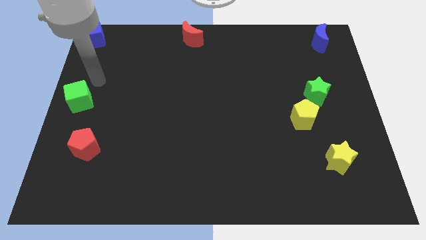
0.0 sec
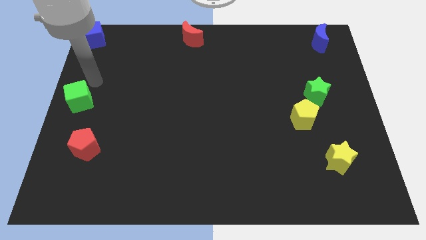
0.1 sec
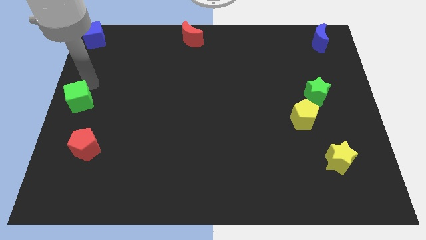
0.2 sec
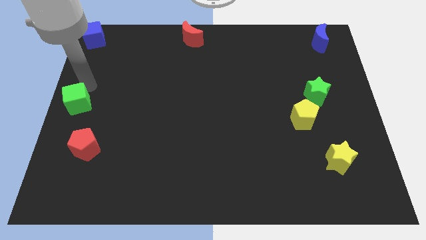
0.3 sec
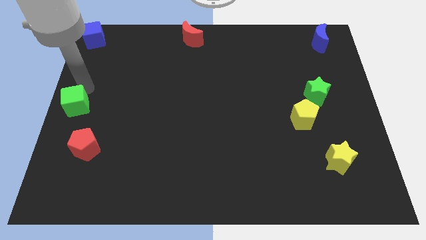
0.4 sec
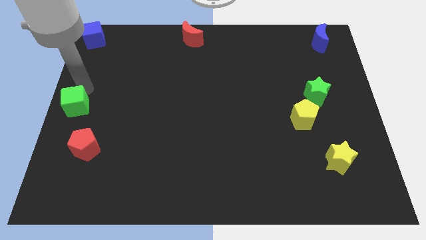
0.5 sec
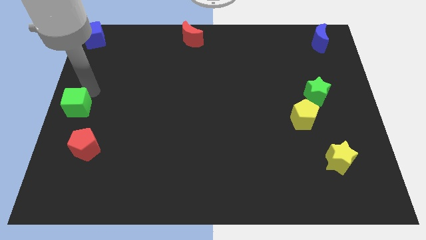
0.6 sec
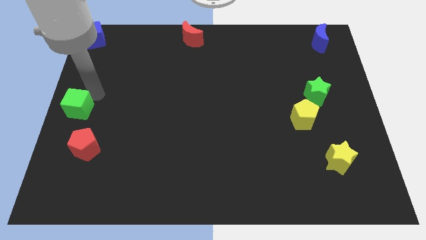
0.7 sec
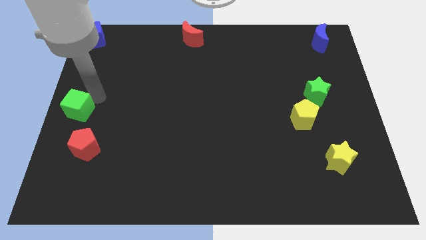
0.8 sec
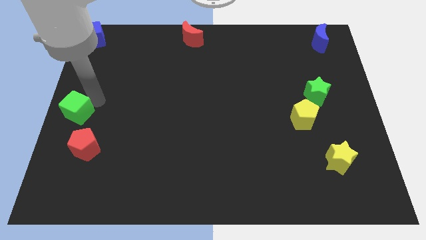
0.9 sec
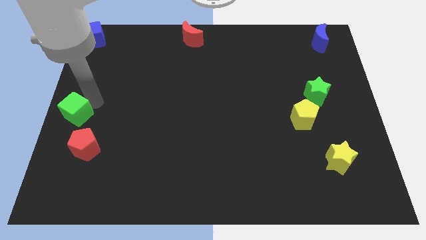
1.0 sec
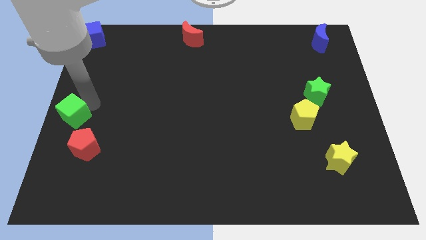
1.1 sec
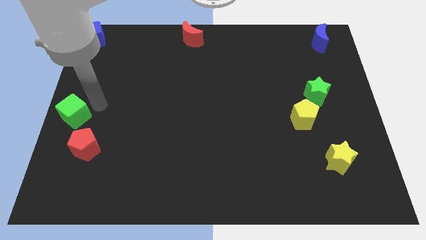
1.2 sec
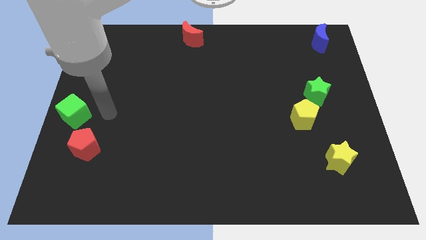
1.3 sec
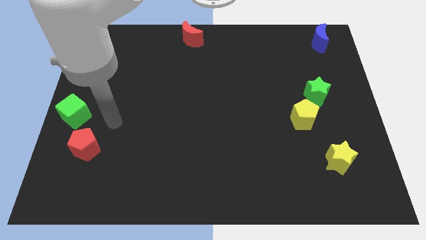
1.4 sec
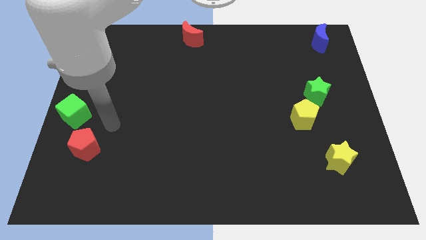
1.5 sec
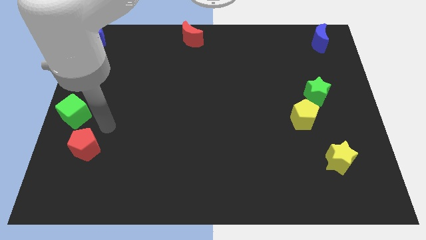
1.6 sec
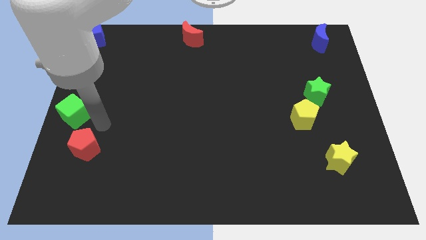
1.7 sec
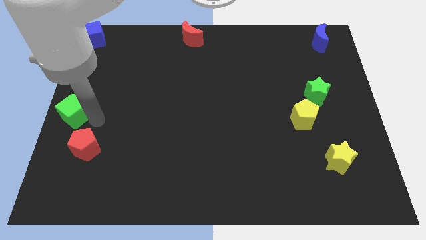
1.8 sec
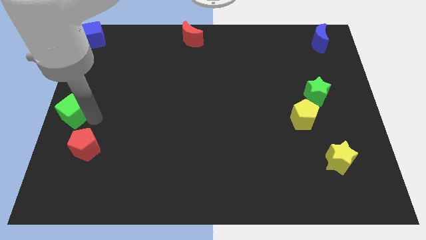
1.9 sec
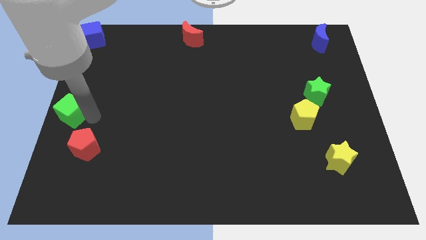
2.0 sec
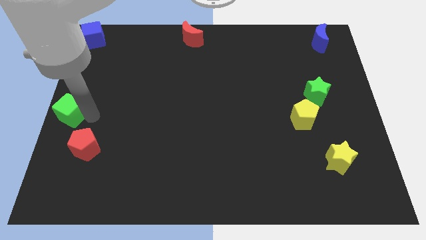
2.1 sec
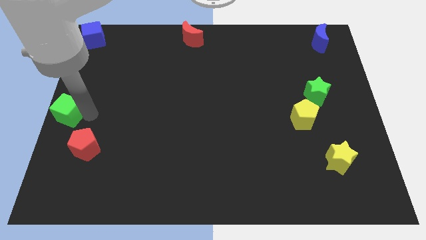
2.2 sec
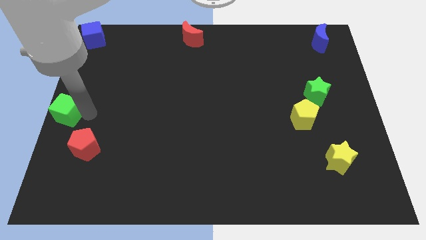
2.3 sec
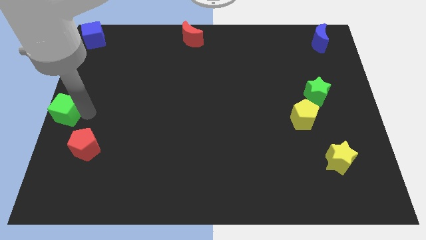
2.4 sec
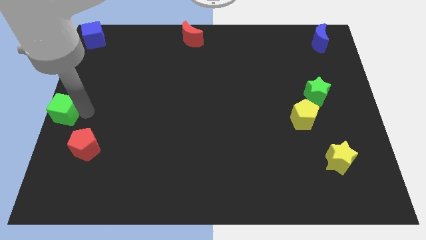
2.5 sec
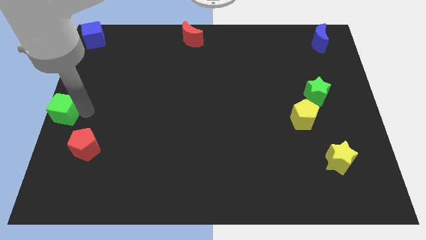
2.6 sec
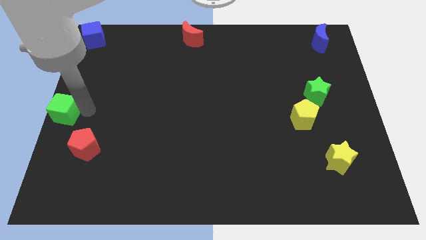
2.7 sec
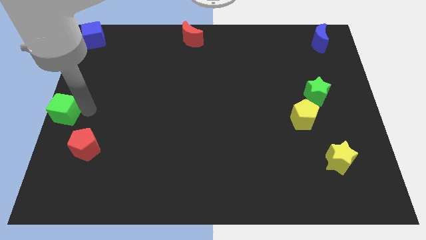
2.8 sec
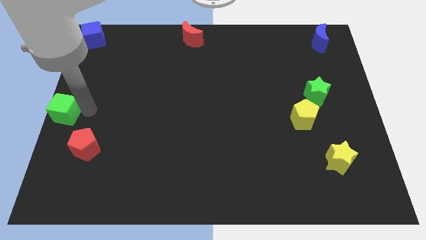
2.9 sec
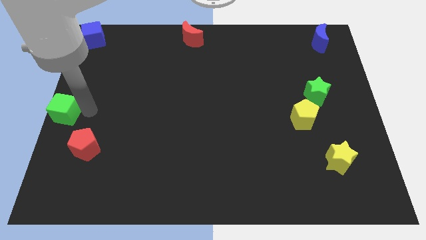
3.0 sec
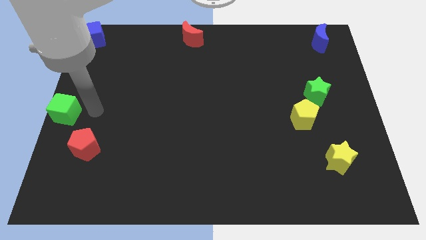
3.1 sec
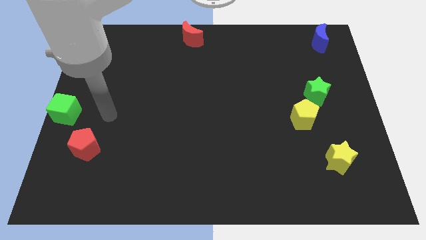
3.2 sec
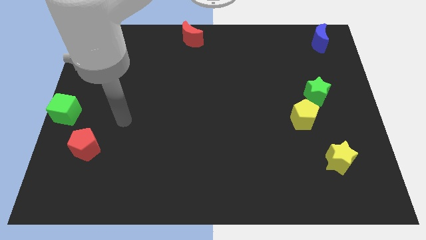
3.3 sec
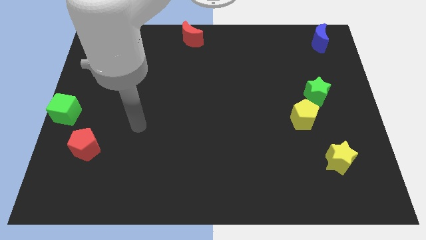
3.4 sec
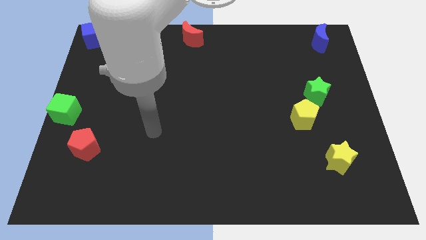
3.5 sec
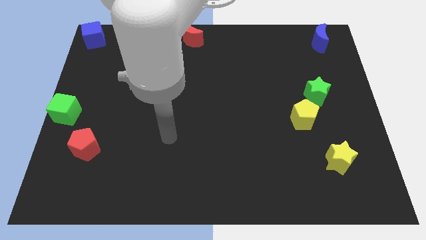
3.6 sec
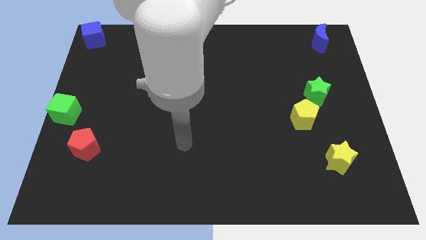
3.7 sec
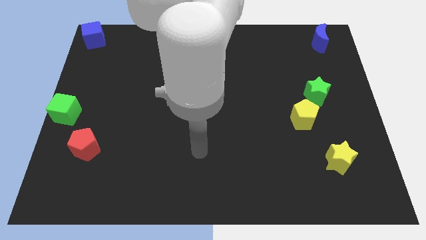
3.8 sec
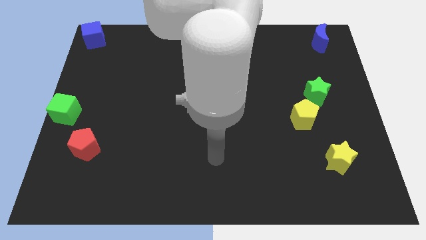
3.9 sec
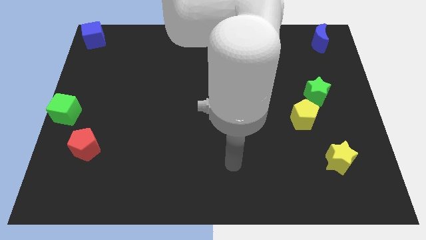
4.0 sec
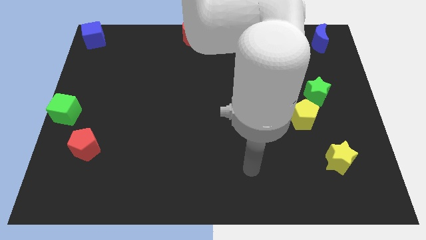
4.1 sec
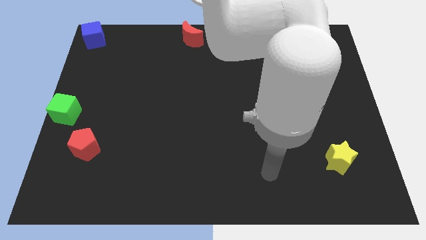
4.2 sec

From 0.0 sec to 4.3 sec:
move the green cube slightly to the center left

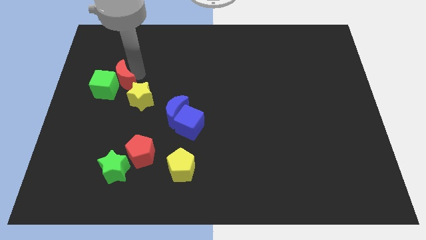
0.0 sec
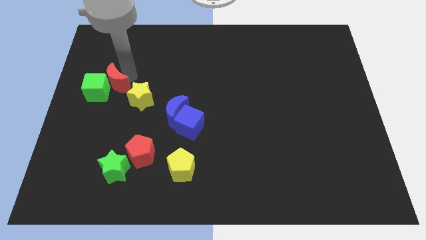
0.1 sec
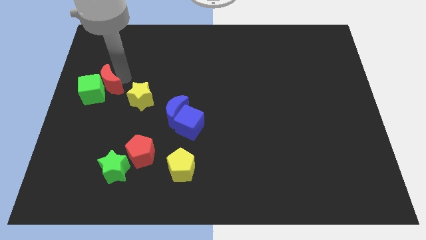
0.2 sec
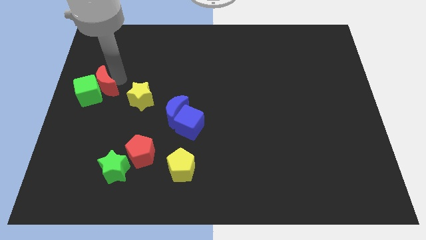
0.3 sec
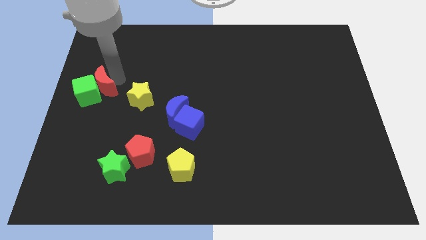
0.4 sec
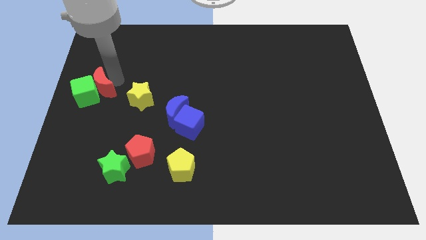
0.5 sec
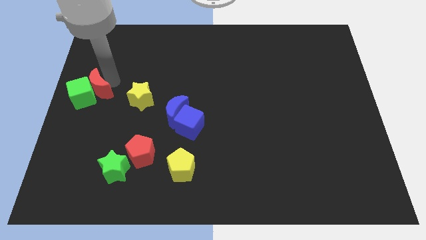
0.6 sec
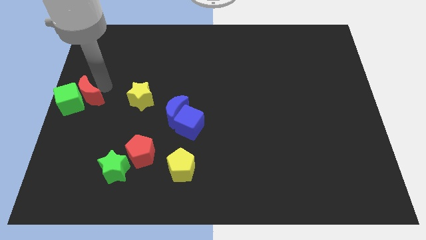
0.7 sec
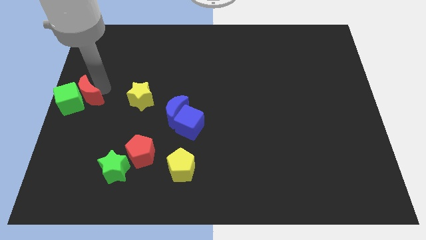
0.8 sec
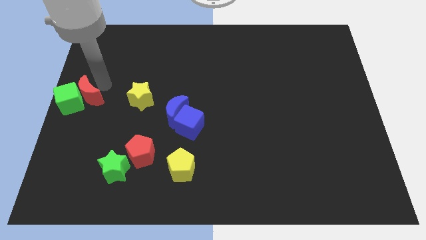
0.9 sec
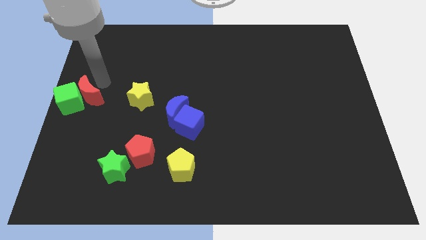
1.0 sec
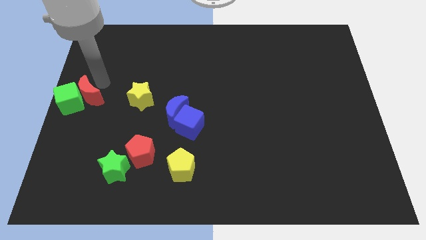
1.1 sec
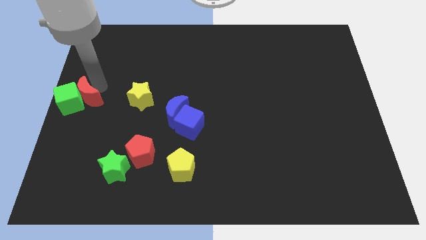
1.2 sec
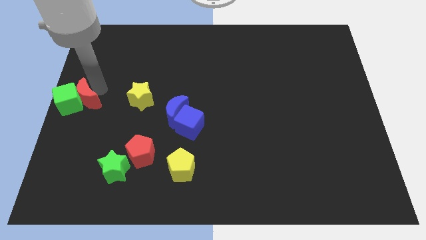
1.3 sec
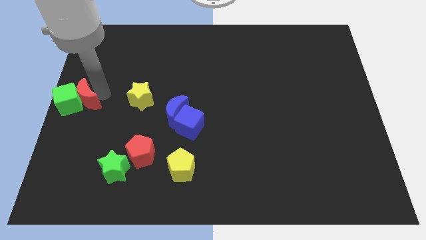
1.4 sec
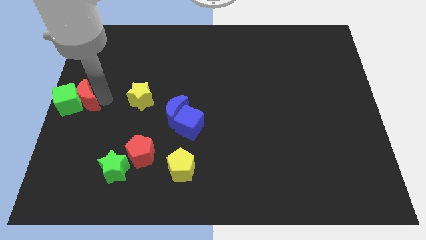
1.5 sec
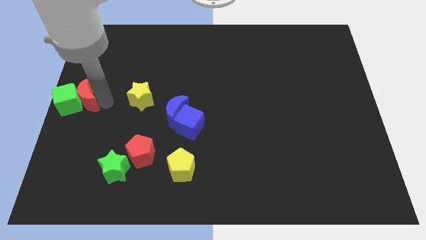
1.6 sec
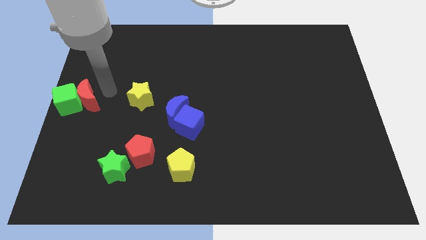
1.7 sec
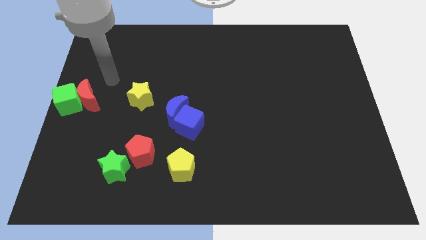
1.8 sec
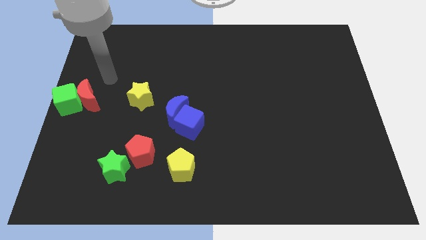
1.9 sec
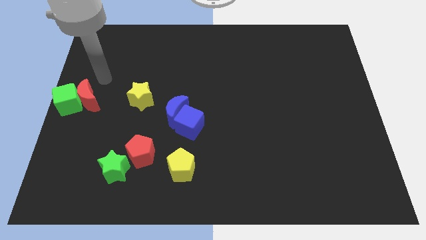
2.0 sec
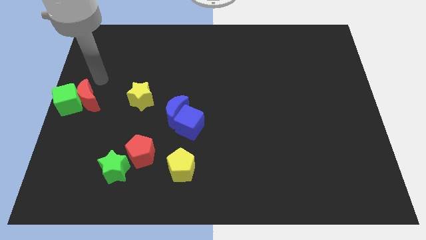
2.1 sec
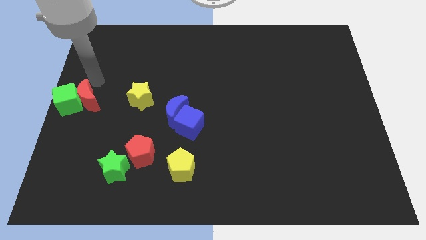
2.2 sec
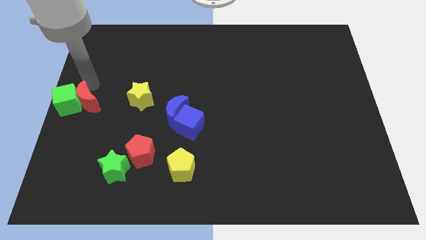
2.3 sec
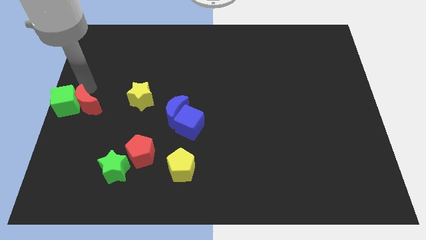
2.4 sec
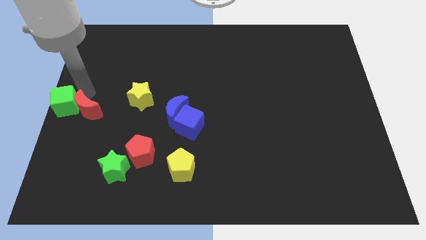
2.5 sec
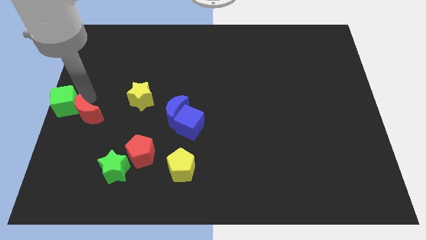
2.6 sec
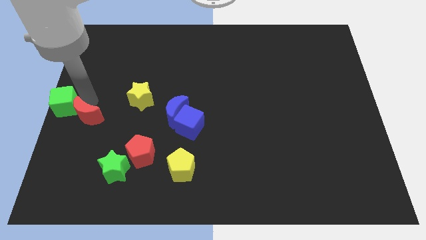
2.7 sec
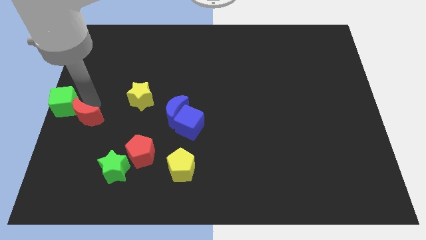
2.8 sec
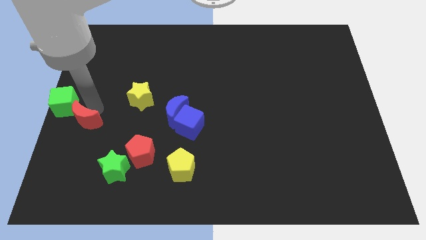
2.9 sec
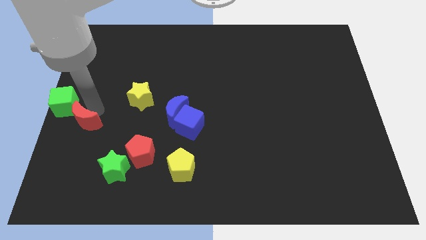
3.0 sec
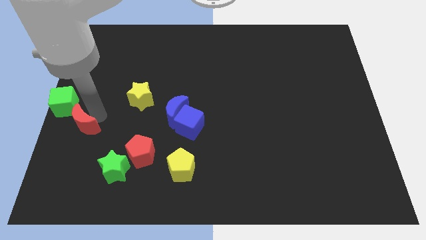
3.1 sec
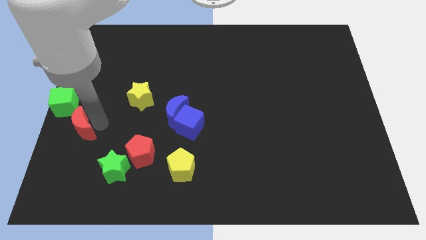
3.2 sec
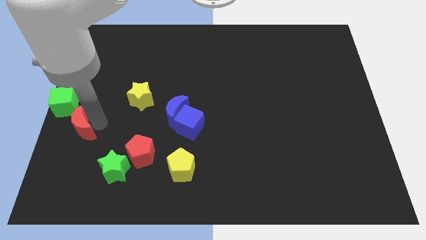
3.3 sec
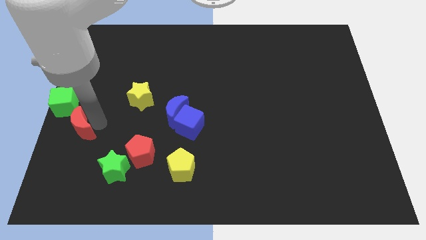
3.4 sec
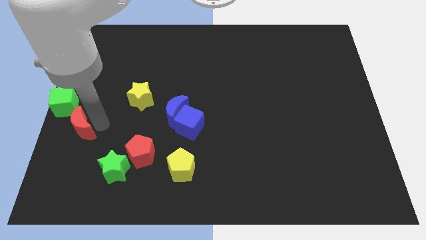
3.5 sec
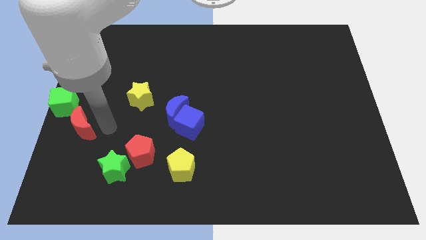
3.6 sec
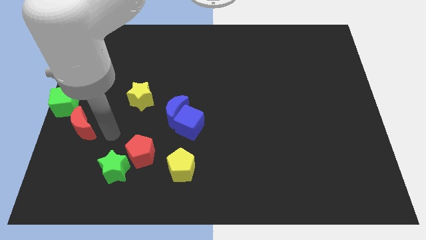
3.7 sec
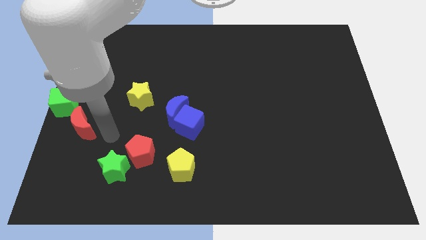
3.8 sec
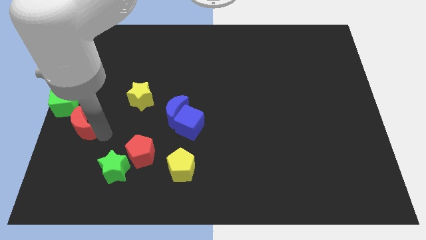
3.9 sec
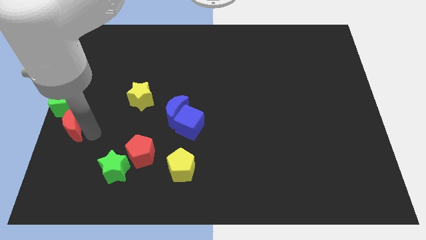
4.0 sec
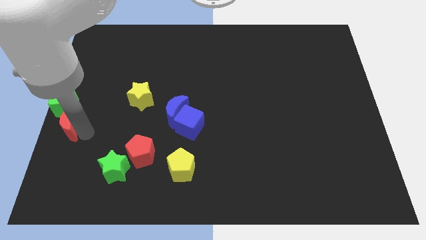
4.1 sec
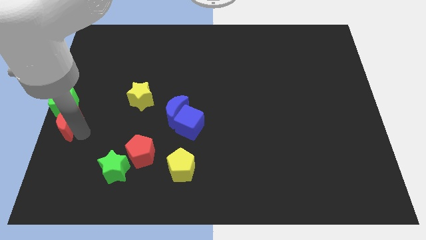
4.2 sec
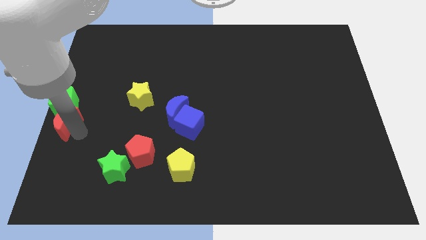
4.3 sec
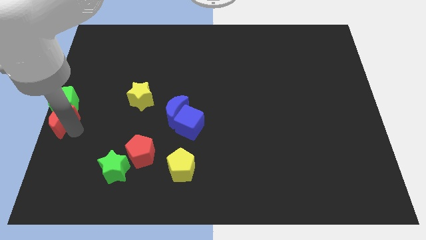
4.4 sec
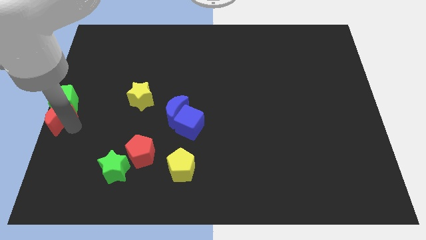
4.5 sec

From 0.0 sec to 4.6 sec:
push the red moon down to the green cube
